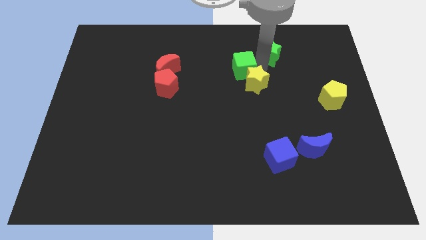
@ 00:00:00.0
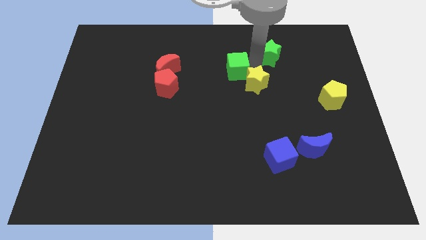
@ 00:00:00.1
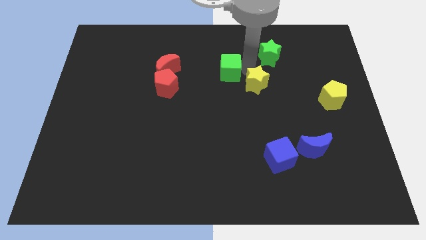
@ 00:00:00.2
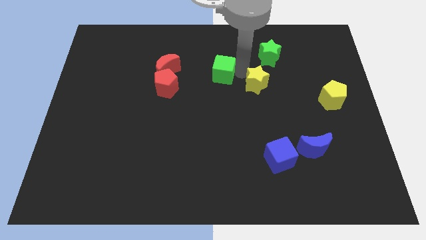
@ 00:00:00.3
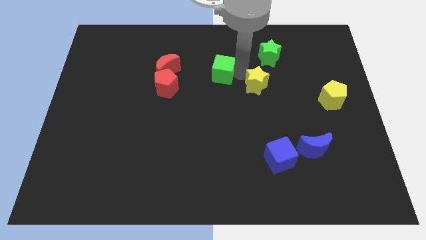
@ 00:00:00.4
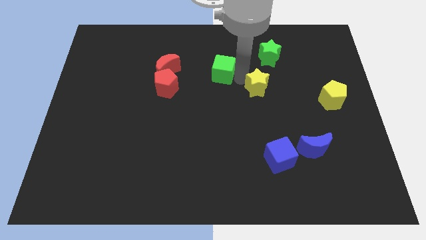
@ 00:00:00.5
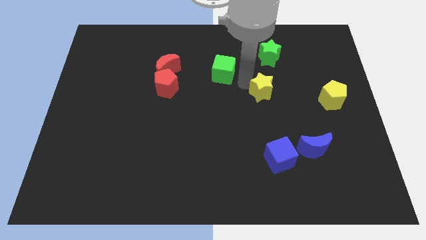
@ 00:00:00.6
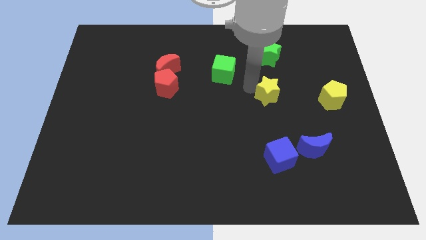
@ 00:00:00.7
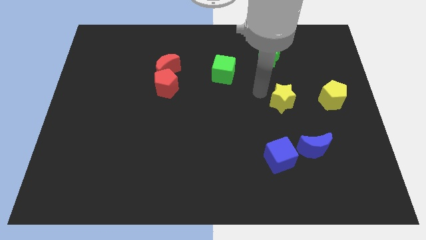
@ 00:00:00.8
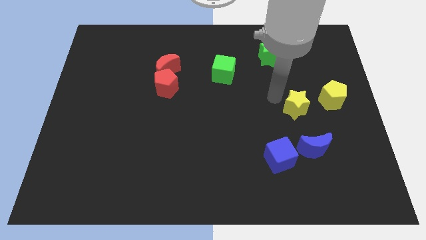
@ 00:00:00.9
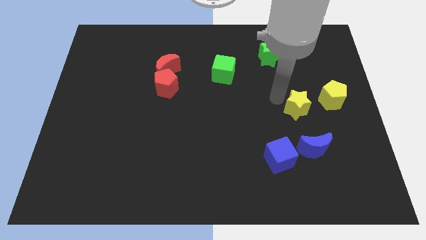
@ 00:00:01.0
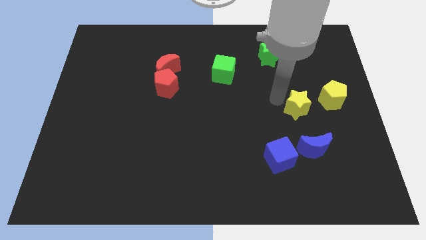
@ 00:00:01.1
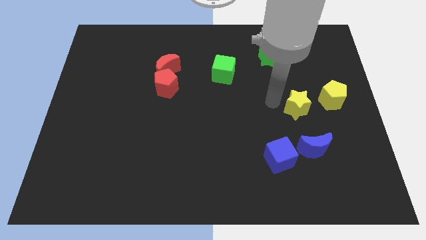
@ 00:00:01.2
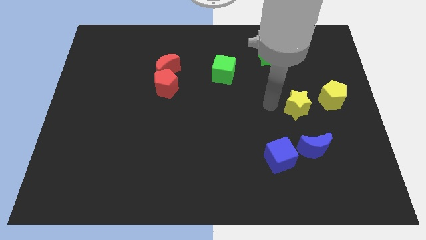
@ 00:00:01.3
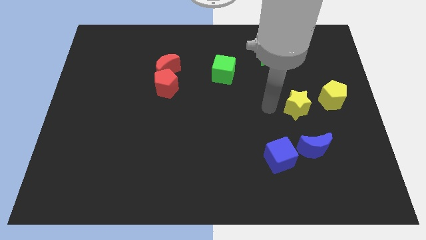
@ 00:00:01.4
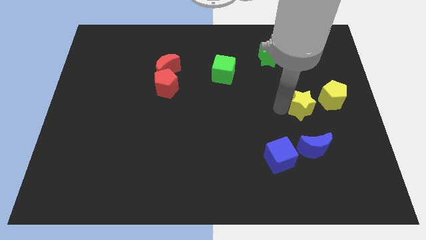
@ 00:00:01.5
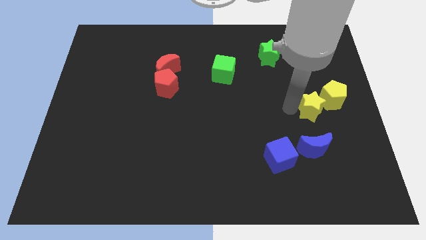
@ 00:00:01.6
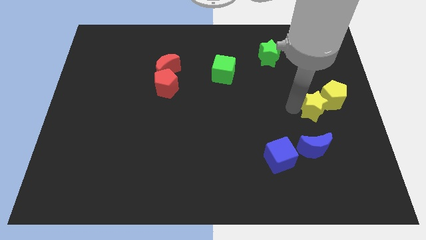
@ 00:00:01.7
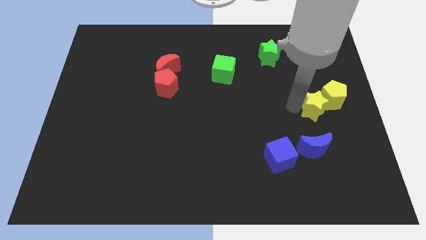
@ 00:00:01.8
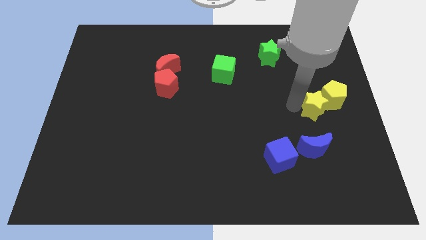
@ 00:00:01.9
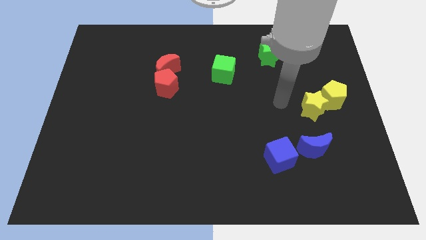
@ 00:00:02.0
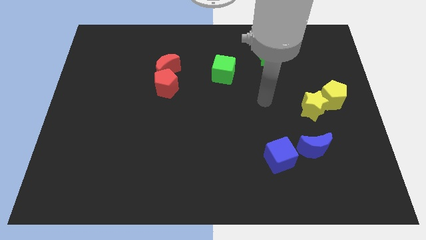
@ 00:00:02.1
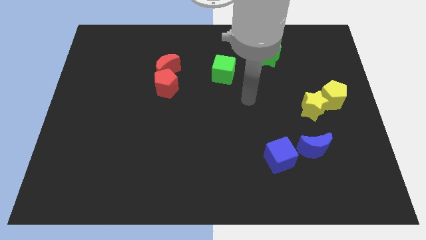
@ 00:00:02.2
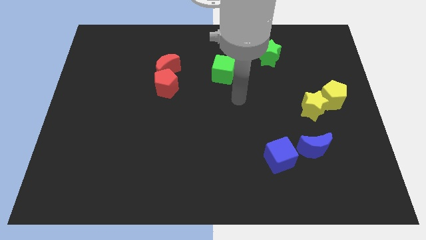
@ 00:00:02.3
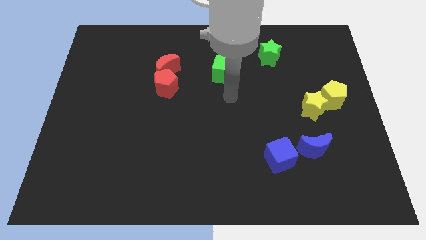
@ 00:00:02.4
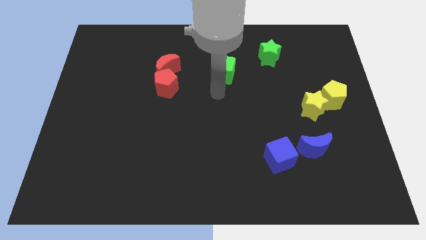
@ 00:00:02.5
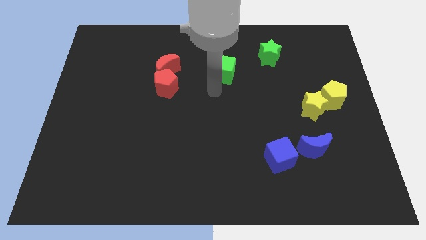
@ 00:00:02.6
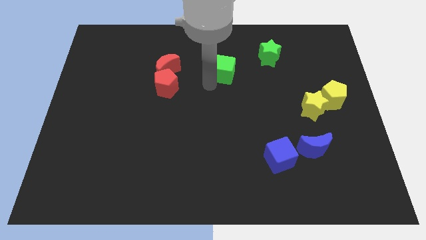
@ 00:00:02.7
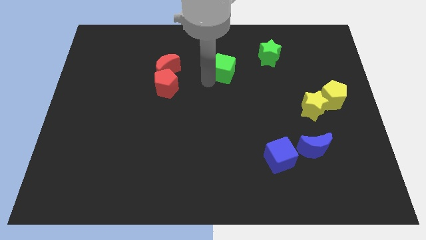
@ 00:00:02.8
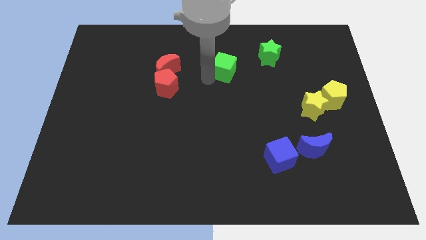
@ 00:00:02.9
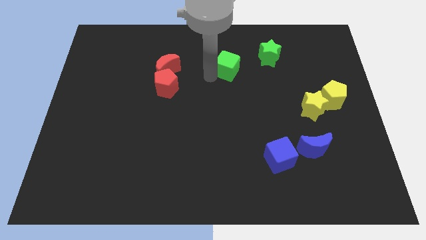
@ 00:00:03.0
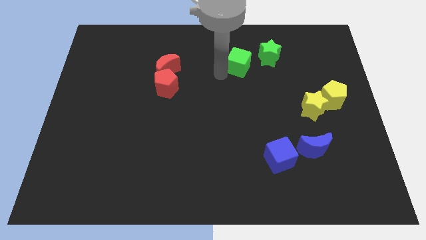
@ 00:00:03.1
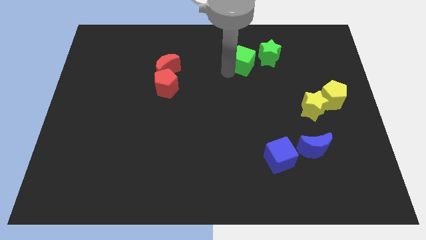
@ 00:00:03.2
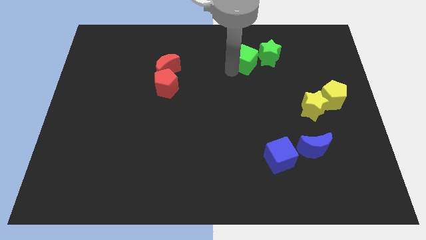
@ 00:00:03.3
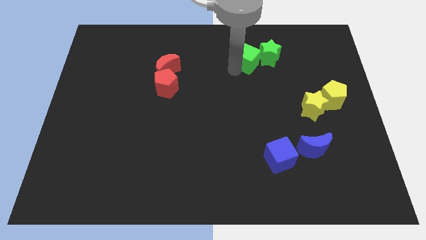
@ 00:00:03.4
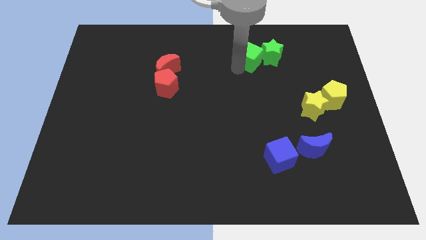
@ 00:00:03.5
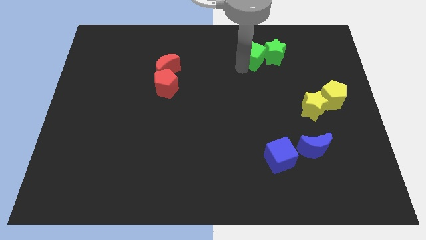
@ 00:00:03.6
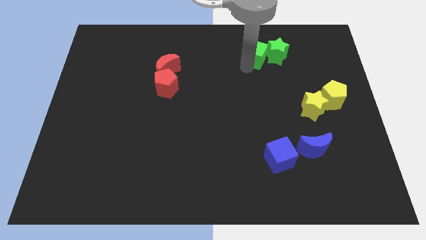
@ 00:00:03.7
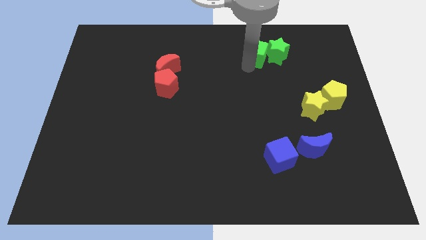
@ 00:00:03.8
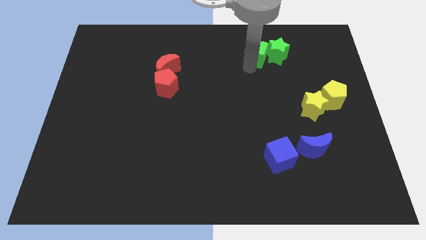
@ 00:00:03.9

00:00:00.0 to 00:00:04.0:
place the green cube left to the green star

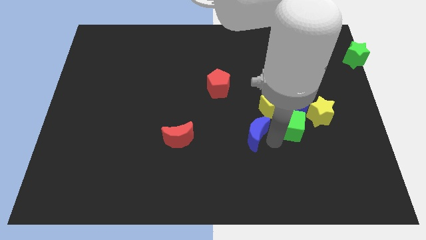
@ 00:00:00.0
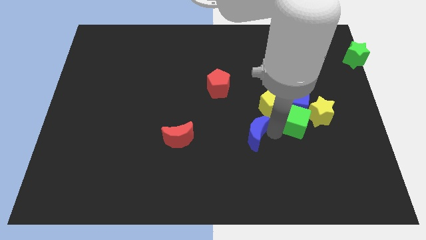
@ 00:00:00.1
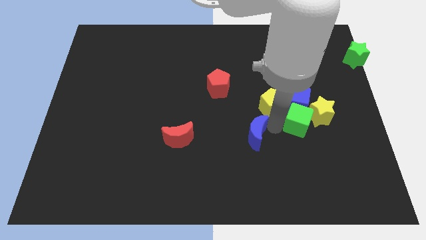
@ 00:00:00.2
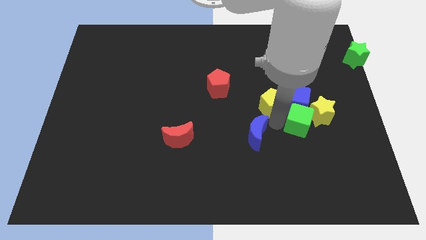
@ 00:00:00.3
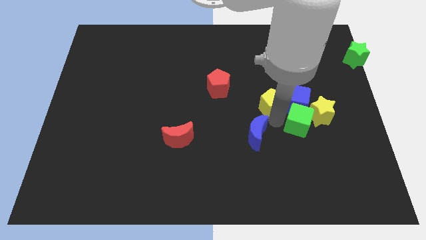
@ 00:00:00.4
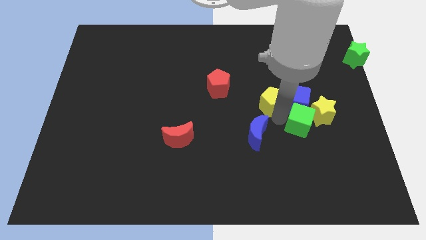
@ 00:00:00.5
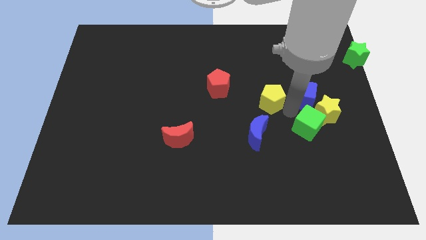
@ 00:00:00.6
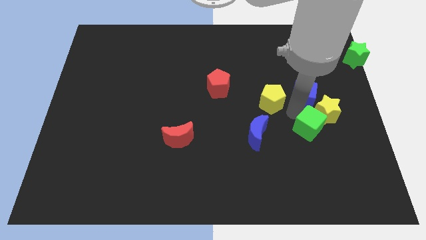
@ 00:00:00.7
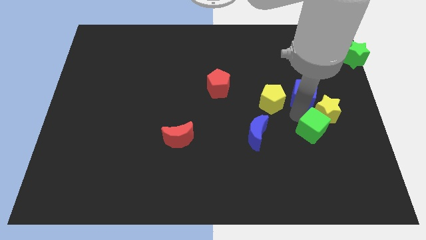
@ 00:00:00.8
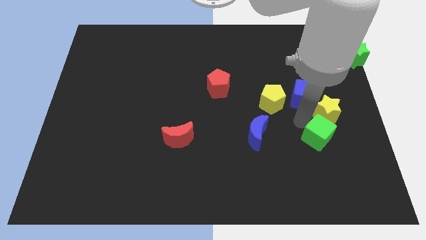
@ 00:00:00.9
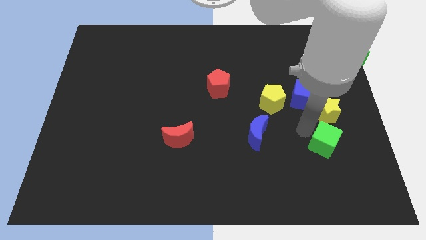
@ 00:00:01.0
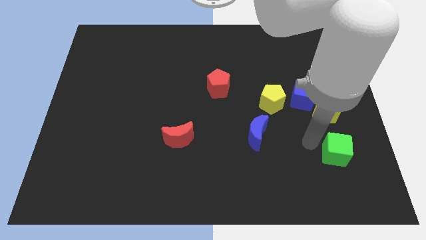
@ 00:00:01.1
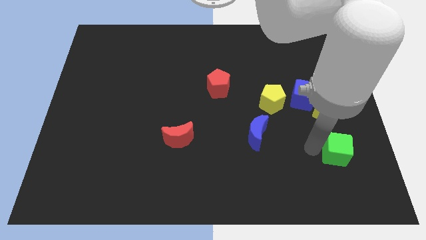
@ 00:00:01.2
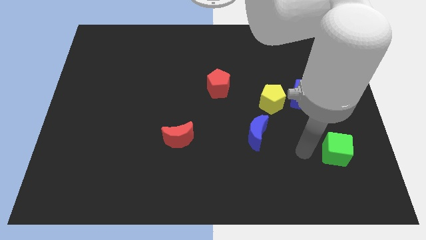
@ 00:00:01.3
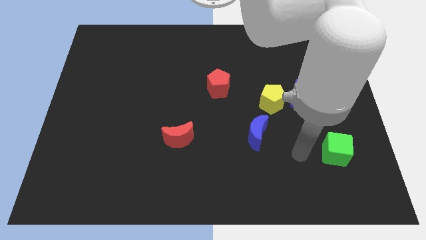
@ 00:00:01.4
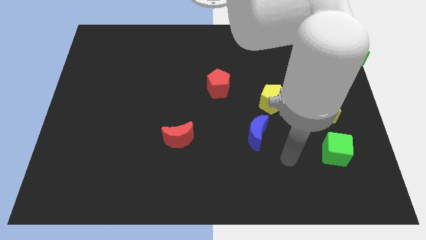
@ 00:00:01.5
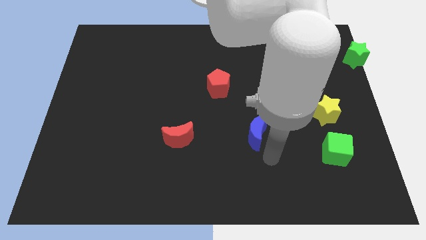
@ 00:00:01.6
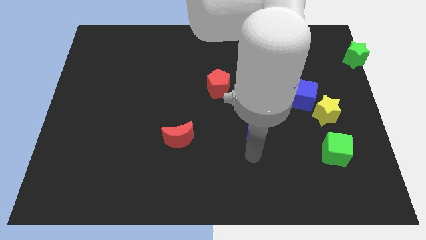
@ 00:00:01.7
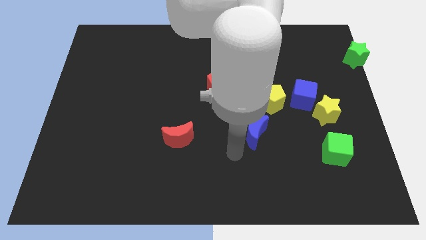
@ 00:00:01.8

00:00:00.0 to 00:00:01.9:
move the green cube to the bottom of the yellow star

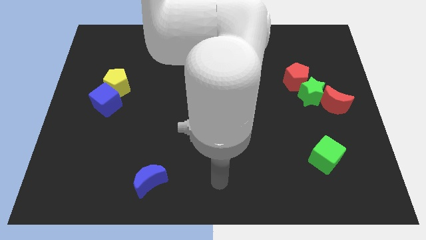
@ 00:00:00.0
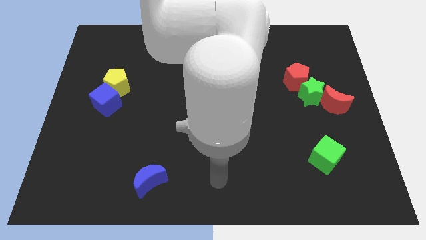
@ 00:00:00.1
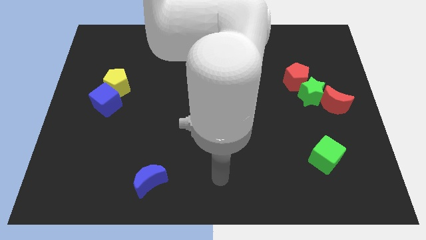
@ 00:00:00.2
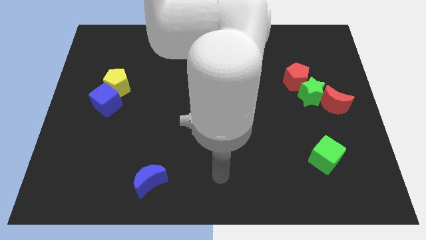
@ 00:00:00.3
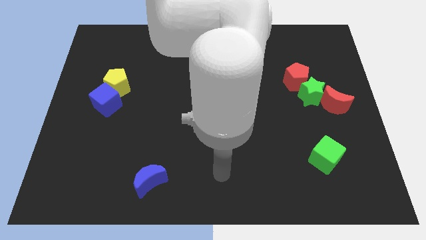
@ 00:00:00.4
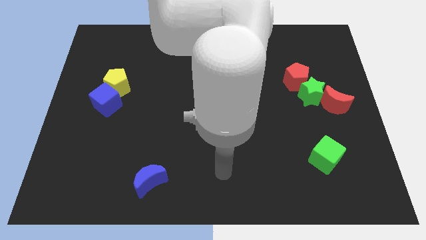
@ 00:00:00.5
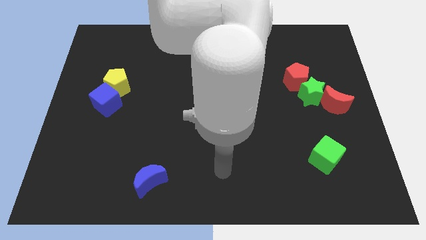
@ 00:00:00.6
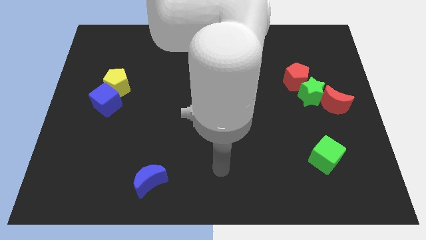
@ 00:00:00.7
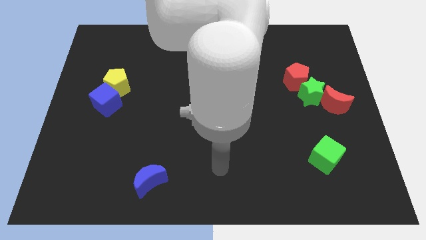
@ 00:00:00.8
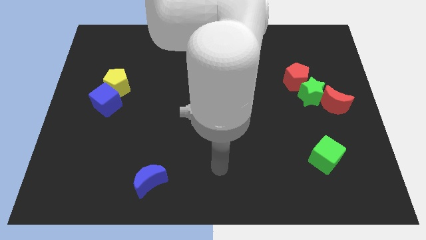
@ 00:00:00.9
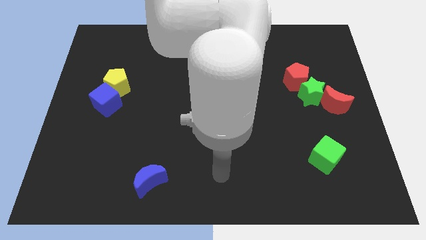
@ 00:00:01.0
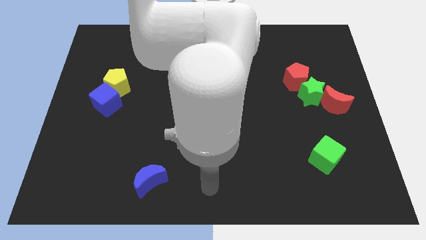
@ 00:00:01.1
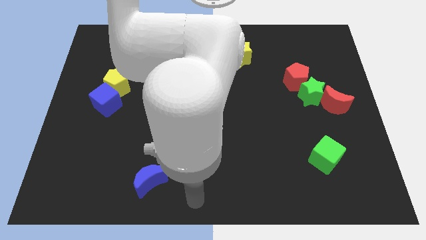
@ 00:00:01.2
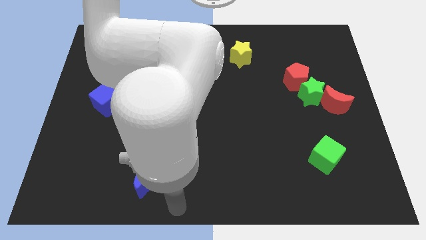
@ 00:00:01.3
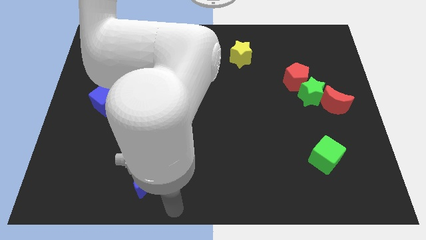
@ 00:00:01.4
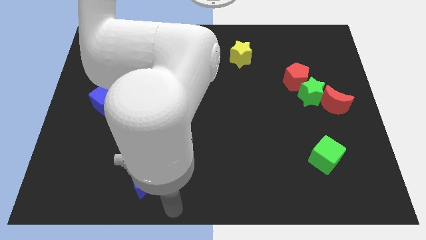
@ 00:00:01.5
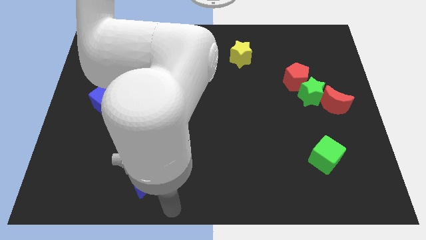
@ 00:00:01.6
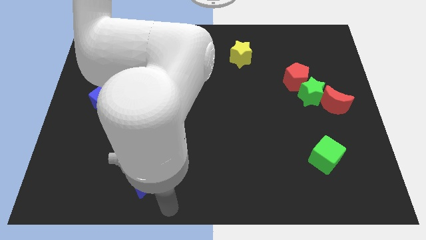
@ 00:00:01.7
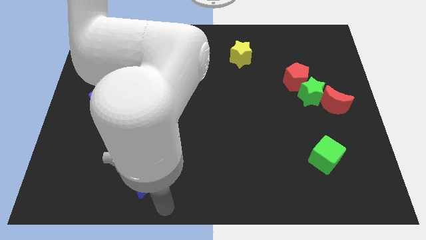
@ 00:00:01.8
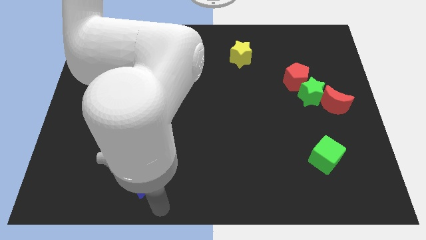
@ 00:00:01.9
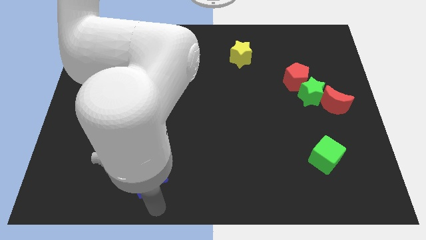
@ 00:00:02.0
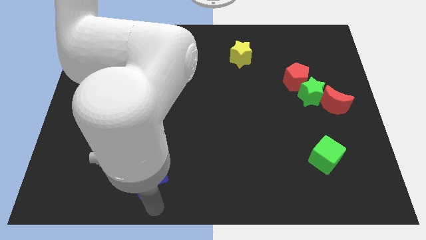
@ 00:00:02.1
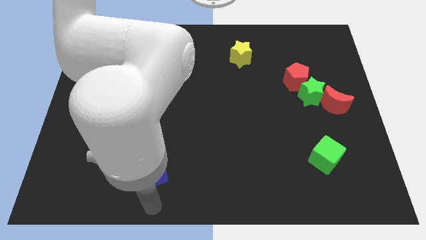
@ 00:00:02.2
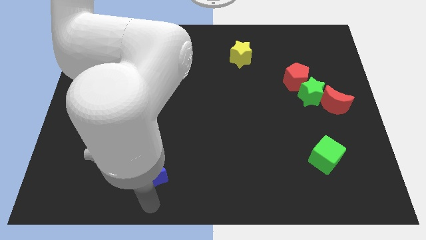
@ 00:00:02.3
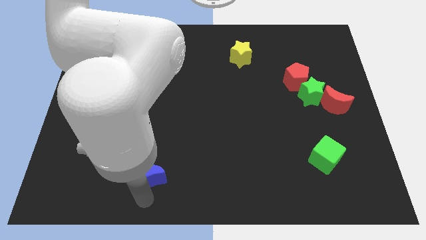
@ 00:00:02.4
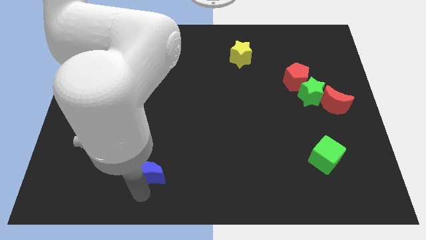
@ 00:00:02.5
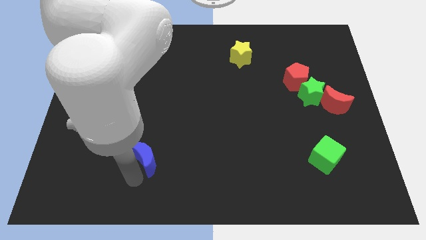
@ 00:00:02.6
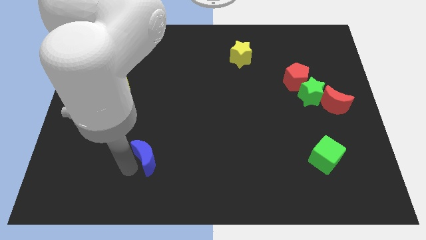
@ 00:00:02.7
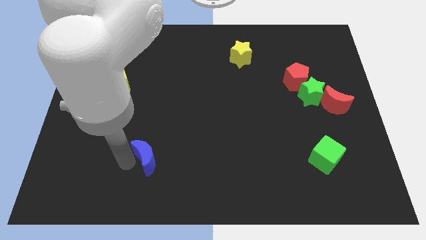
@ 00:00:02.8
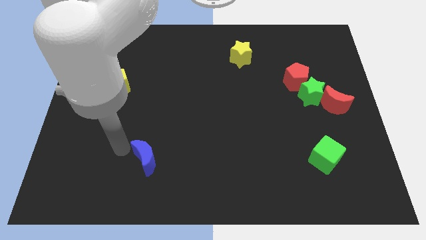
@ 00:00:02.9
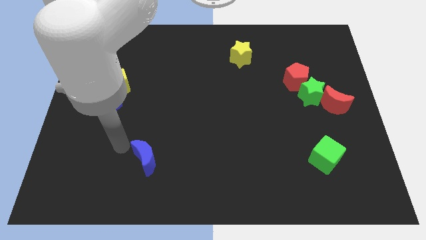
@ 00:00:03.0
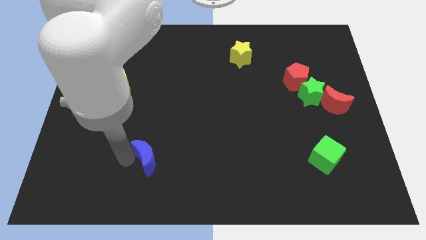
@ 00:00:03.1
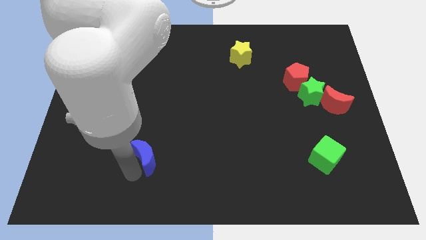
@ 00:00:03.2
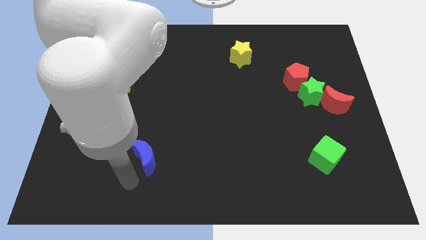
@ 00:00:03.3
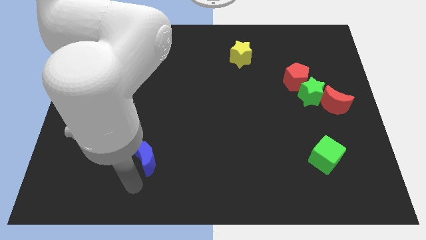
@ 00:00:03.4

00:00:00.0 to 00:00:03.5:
move the blue crescent horizontally to the left side of the green cube
